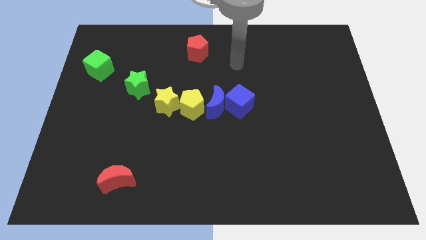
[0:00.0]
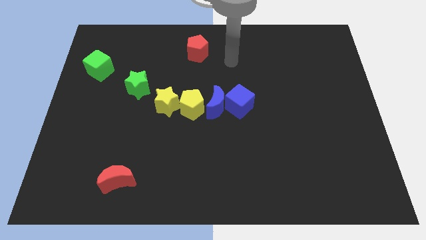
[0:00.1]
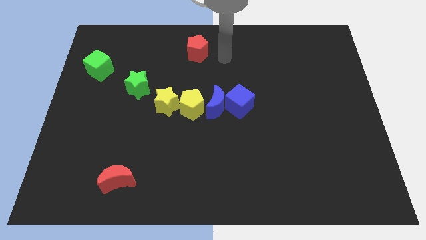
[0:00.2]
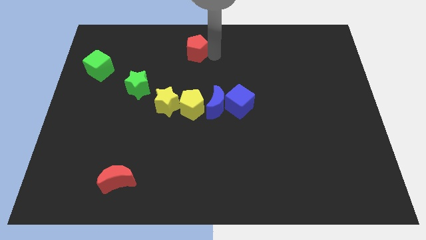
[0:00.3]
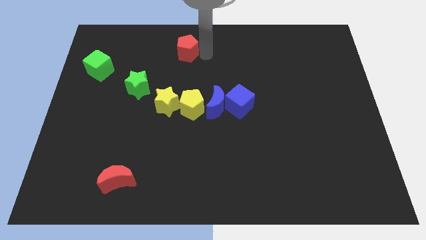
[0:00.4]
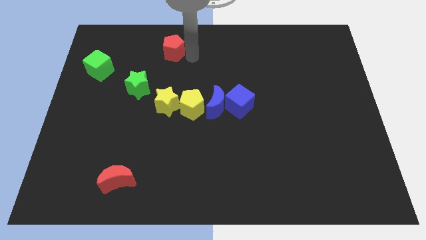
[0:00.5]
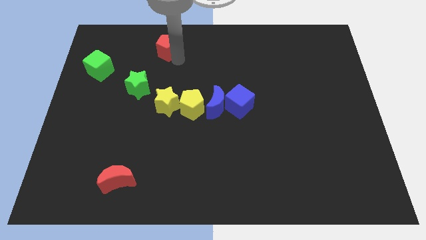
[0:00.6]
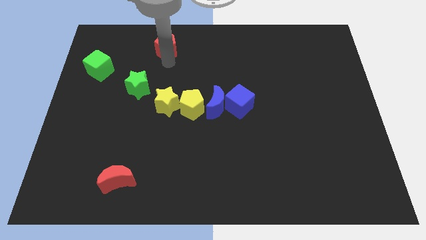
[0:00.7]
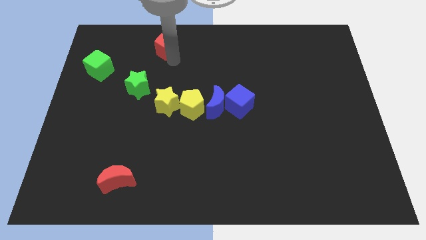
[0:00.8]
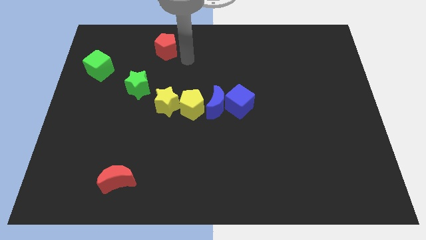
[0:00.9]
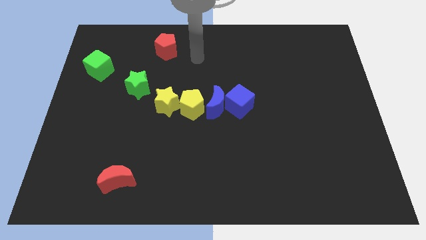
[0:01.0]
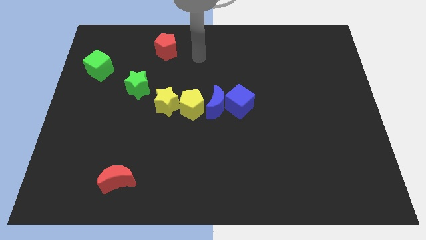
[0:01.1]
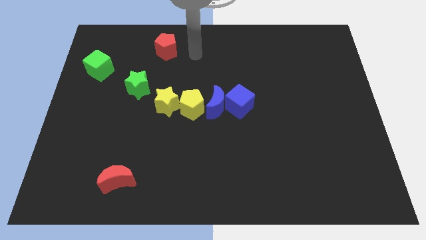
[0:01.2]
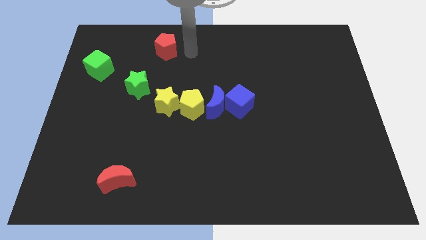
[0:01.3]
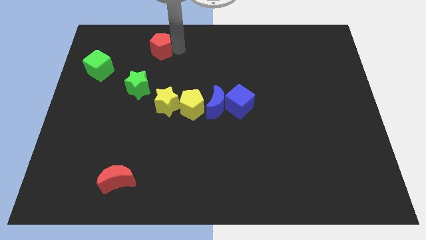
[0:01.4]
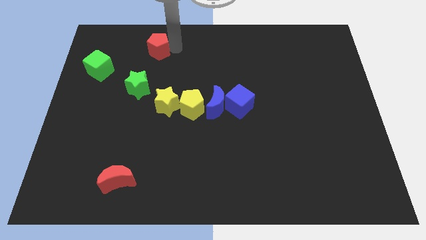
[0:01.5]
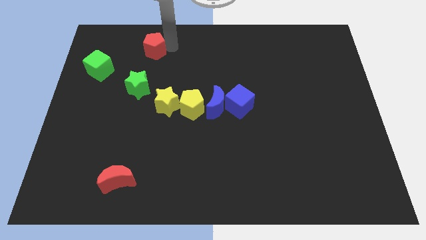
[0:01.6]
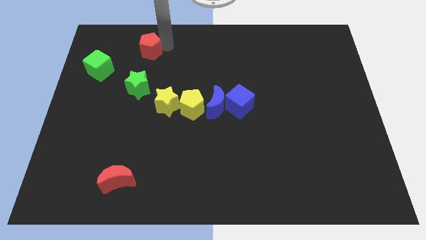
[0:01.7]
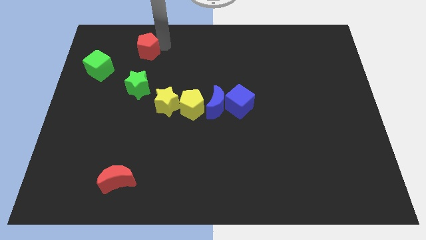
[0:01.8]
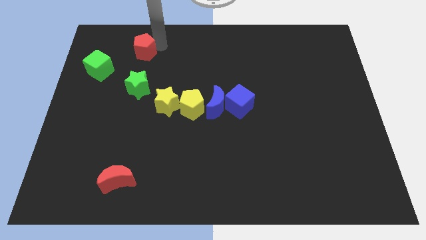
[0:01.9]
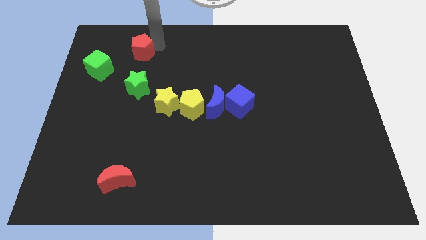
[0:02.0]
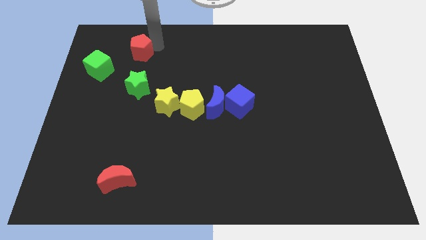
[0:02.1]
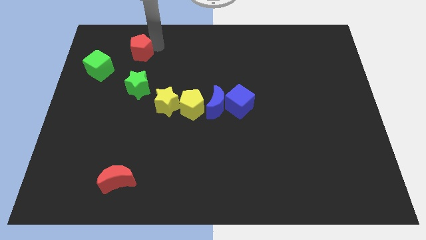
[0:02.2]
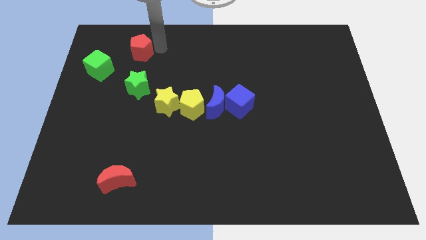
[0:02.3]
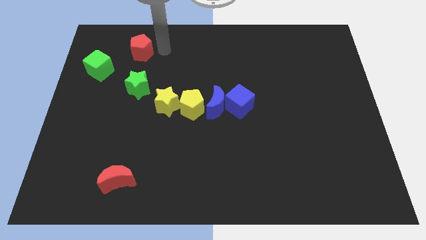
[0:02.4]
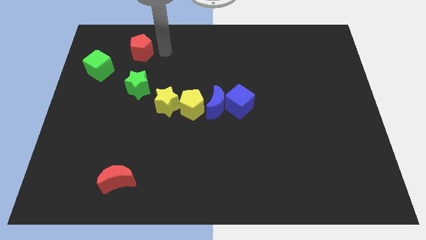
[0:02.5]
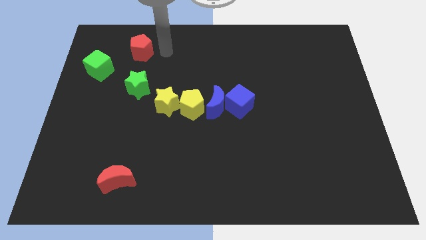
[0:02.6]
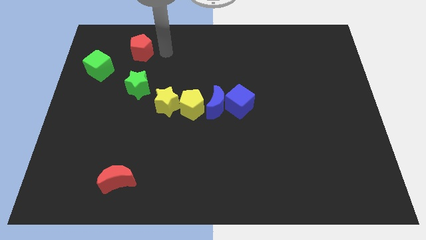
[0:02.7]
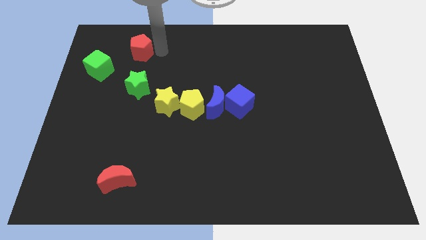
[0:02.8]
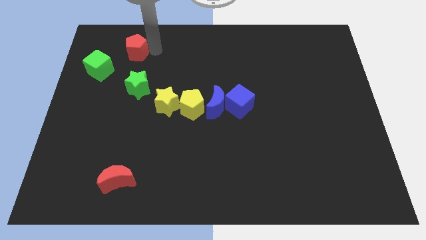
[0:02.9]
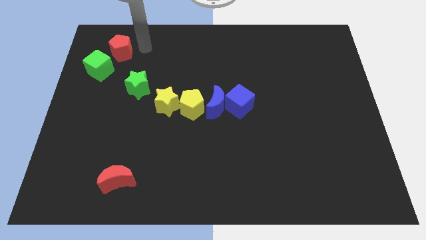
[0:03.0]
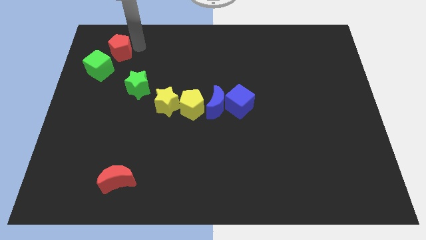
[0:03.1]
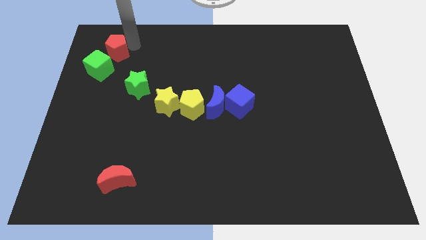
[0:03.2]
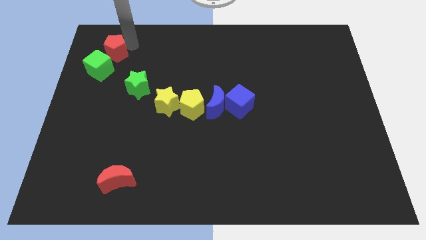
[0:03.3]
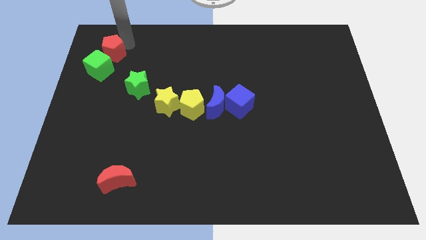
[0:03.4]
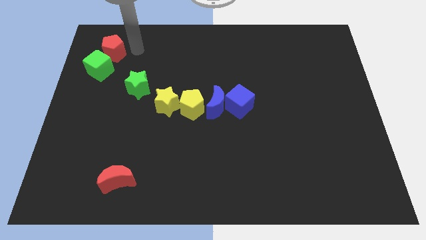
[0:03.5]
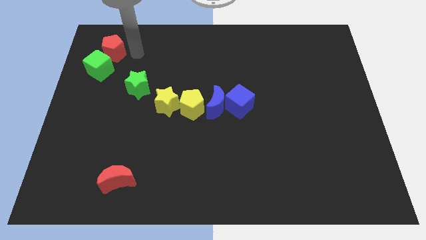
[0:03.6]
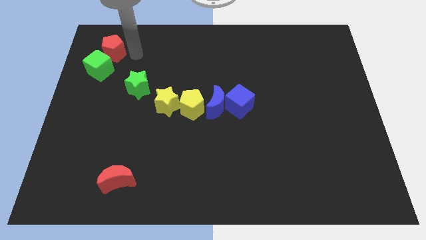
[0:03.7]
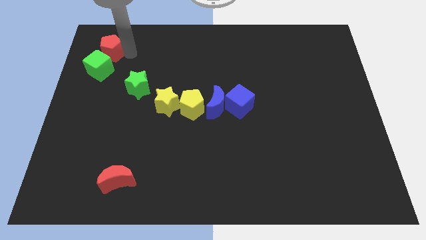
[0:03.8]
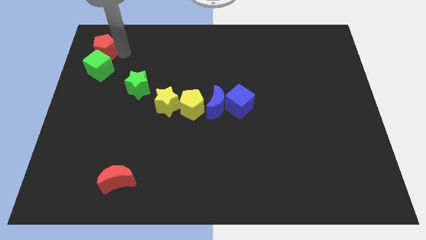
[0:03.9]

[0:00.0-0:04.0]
move the red pentagon to the top left into the green cube

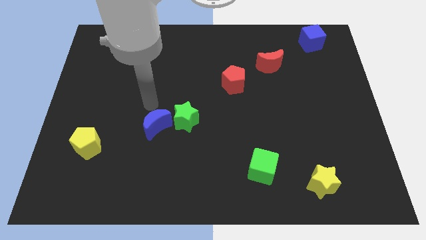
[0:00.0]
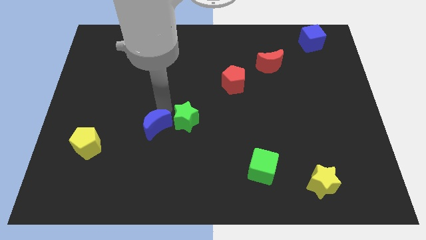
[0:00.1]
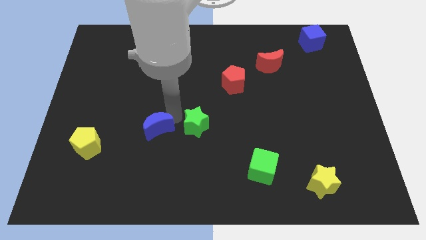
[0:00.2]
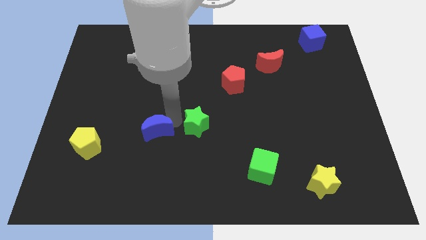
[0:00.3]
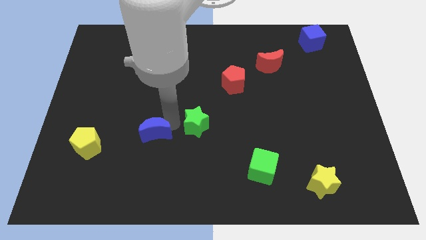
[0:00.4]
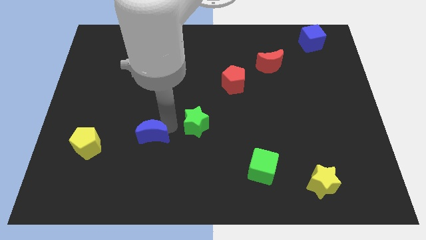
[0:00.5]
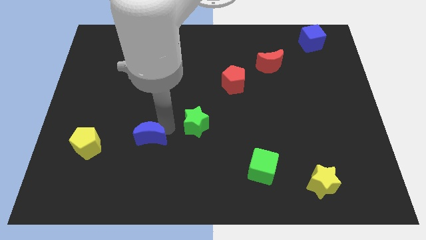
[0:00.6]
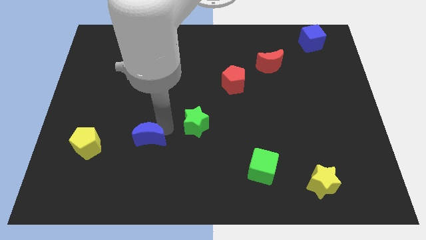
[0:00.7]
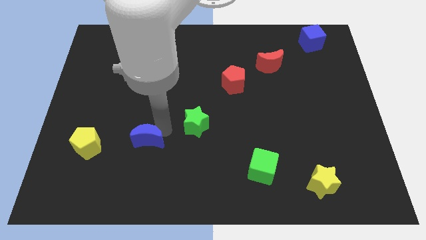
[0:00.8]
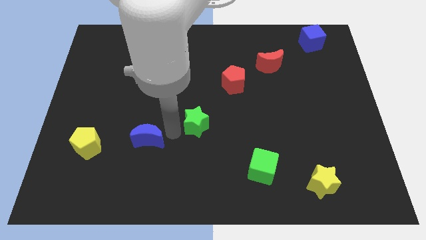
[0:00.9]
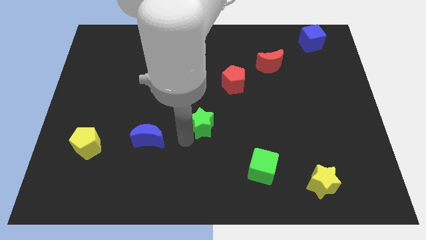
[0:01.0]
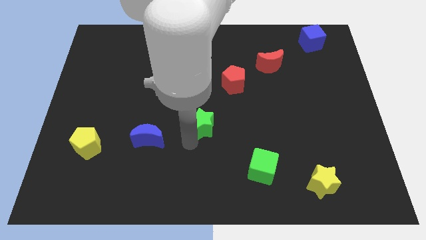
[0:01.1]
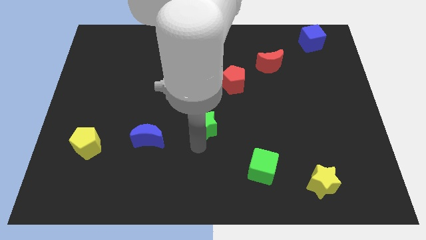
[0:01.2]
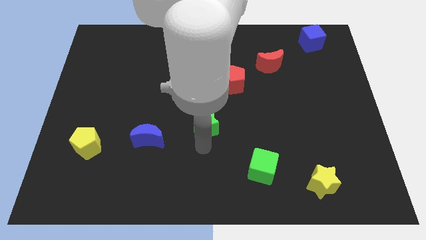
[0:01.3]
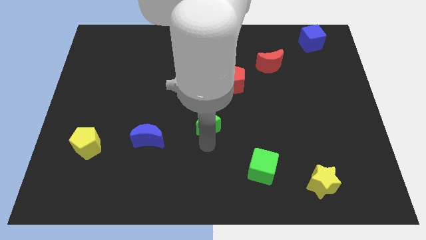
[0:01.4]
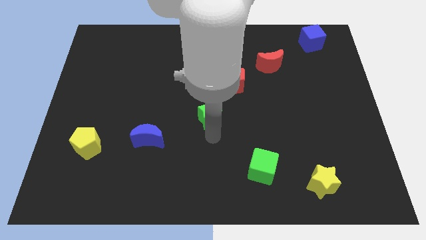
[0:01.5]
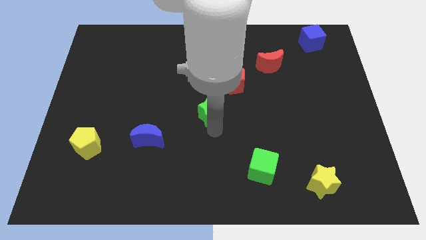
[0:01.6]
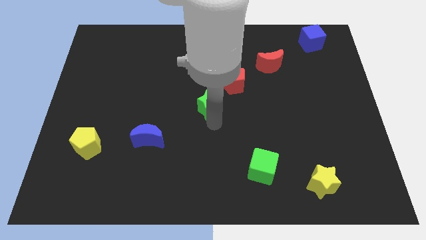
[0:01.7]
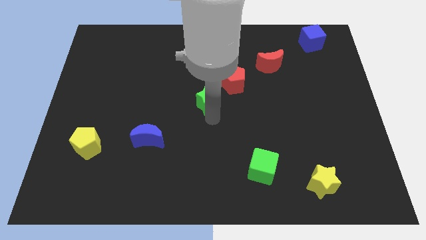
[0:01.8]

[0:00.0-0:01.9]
move the green star to the center

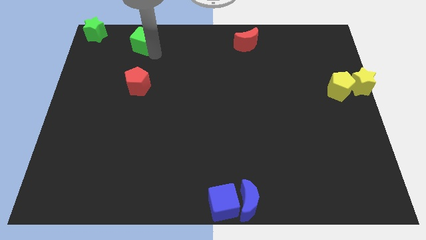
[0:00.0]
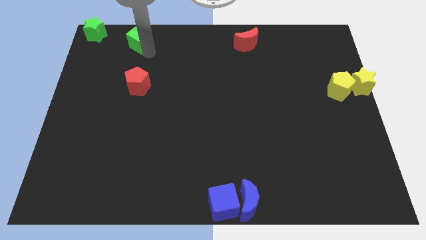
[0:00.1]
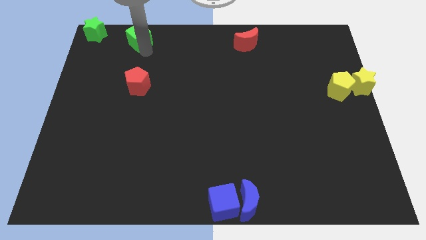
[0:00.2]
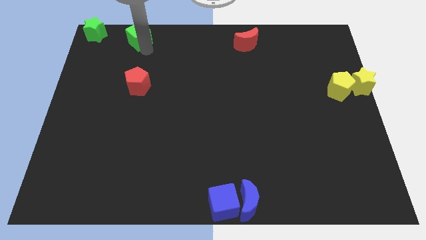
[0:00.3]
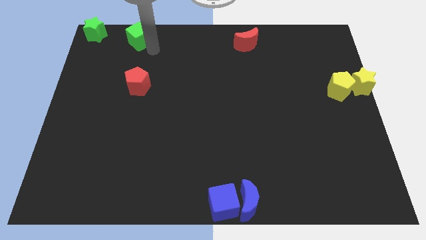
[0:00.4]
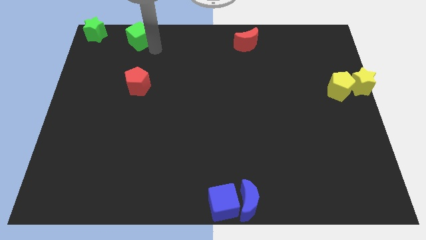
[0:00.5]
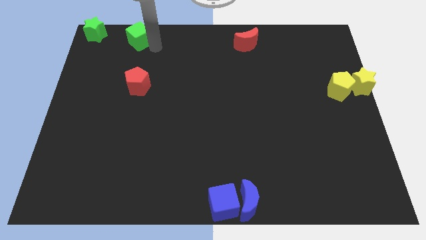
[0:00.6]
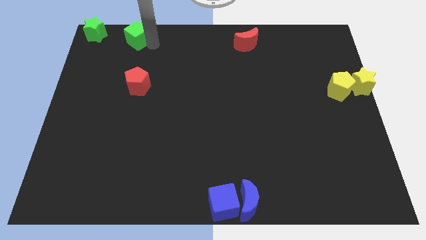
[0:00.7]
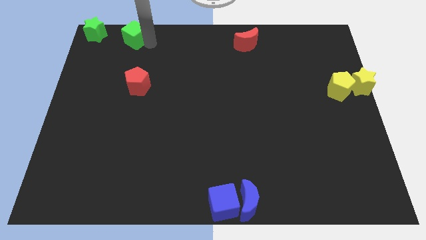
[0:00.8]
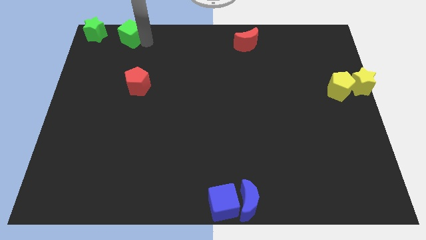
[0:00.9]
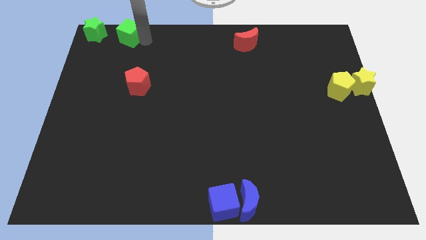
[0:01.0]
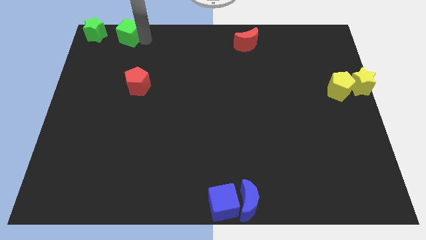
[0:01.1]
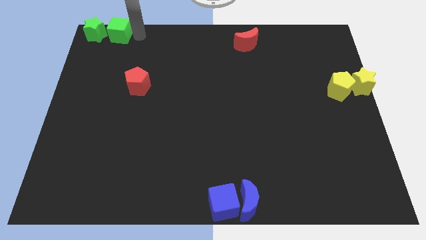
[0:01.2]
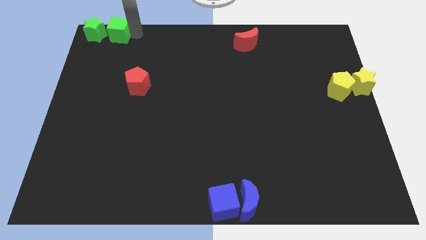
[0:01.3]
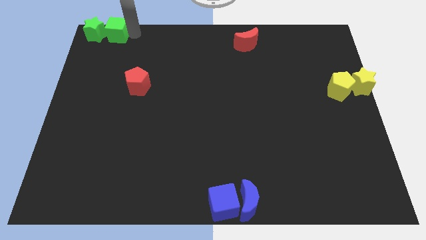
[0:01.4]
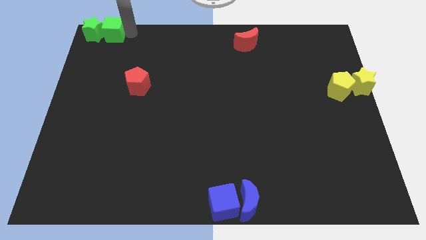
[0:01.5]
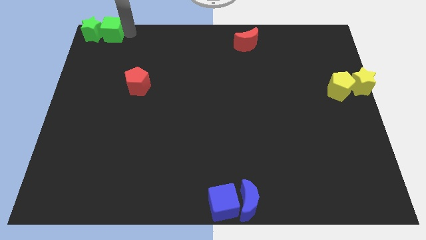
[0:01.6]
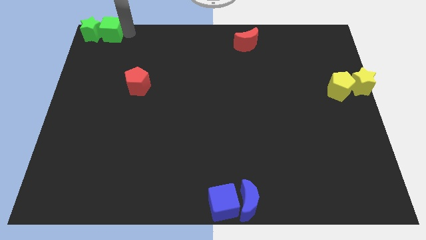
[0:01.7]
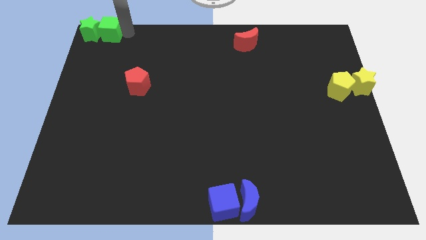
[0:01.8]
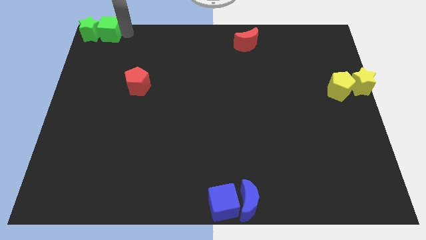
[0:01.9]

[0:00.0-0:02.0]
drag the green cube close to the green star

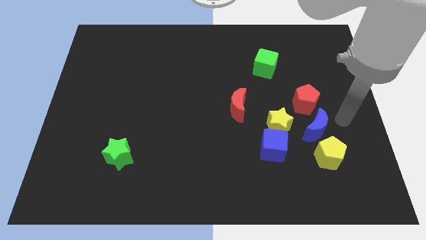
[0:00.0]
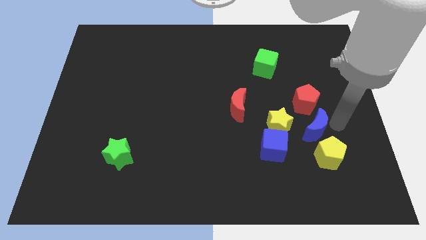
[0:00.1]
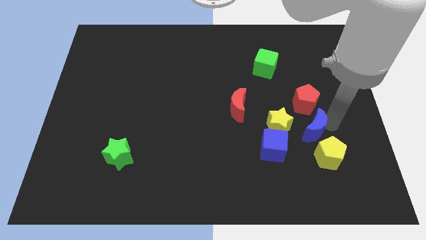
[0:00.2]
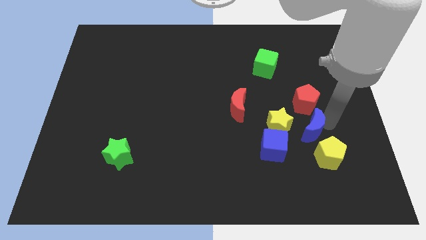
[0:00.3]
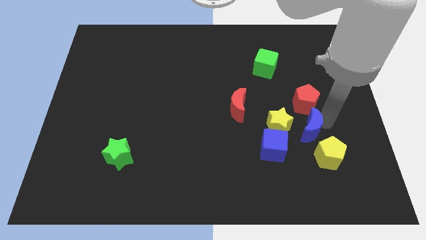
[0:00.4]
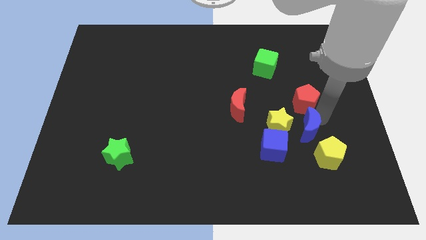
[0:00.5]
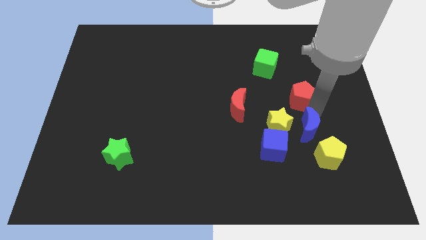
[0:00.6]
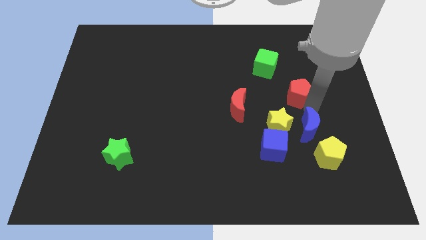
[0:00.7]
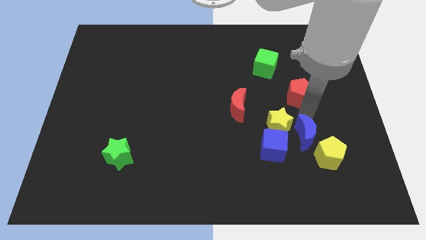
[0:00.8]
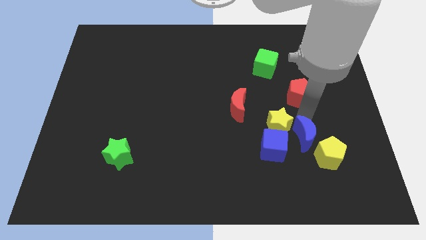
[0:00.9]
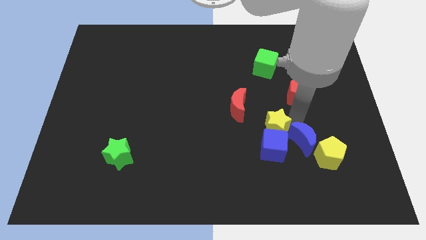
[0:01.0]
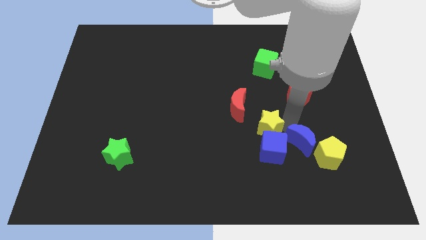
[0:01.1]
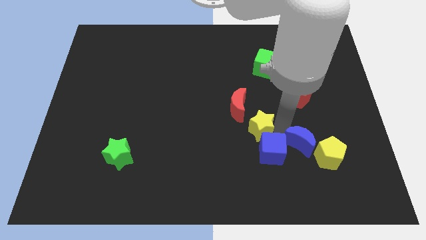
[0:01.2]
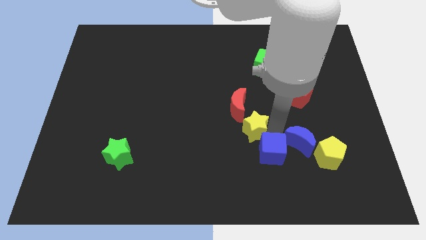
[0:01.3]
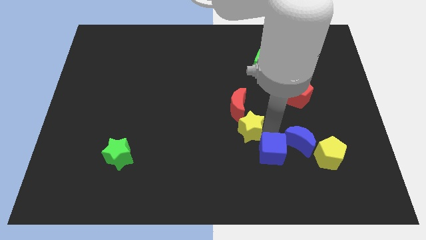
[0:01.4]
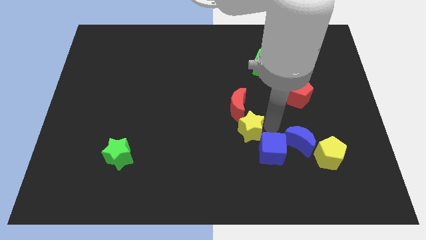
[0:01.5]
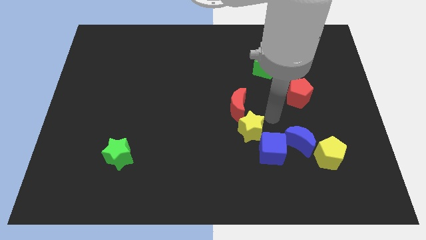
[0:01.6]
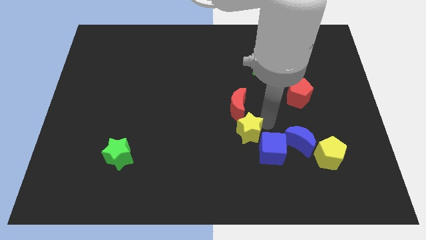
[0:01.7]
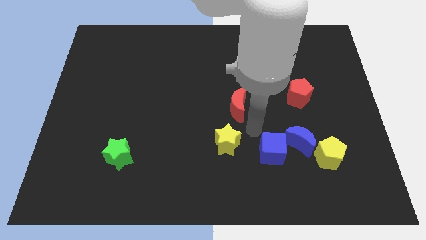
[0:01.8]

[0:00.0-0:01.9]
place the yellow star in between the red moon and blue cube
